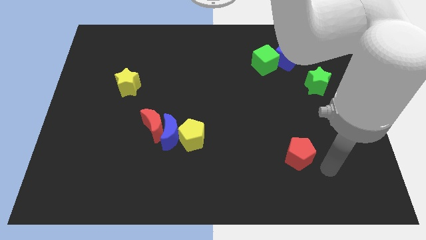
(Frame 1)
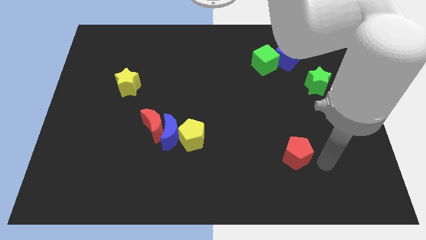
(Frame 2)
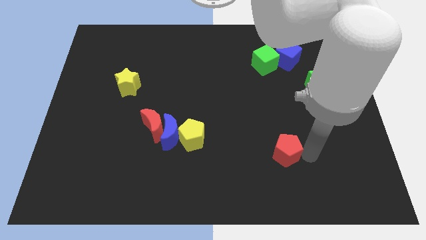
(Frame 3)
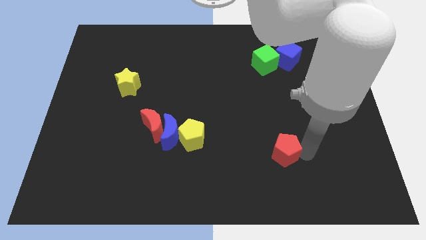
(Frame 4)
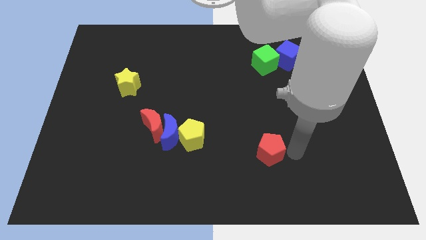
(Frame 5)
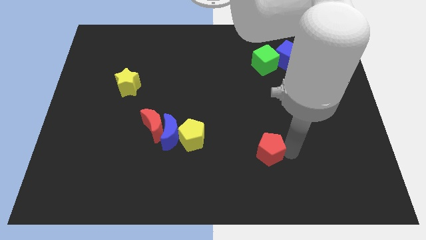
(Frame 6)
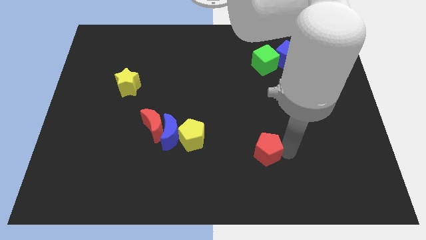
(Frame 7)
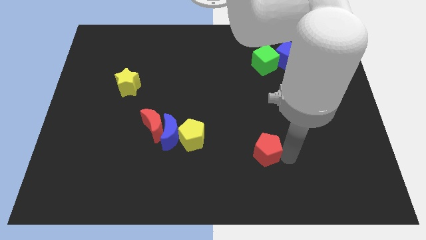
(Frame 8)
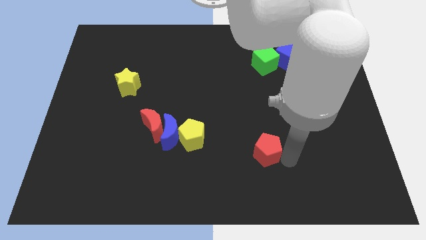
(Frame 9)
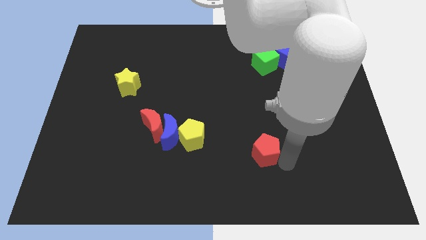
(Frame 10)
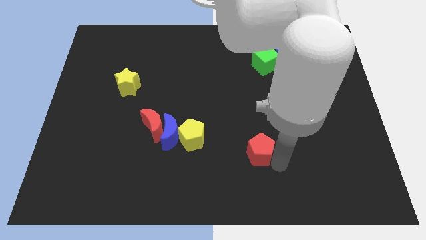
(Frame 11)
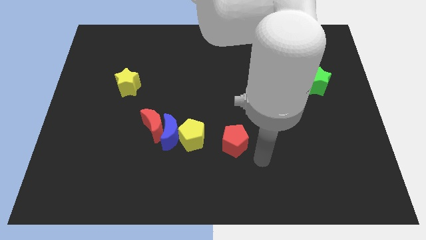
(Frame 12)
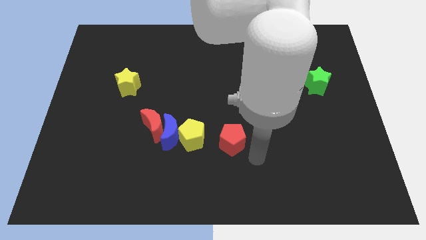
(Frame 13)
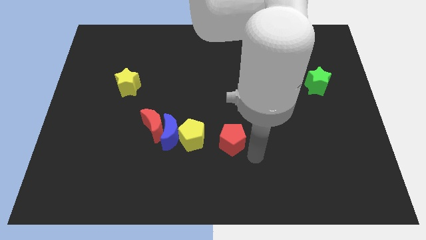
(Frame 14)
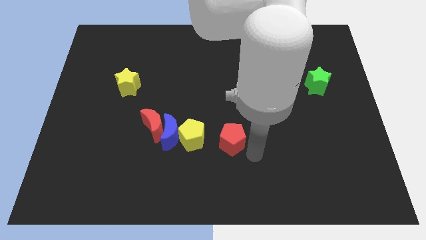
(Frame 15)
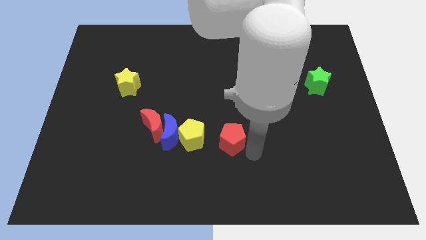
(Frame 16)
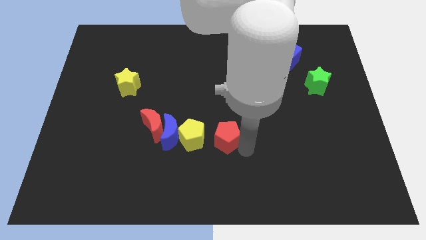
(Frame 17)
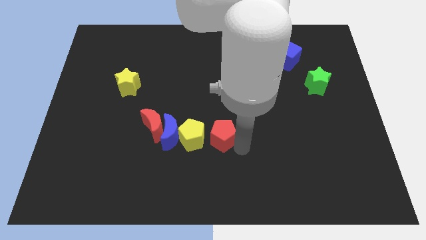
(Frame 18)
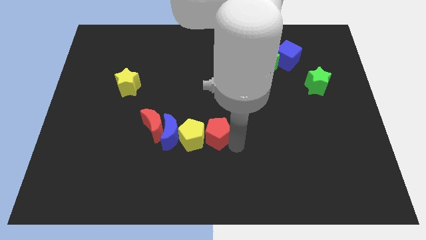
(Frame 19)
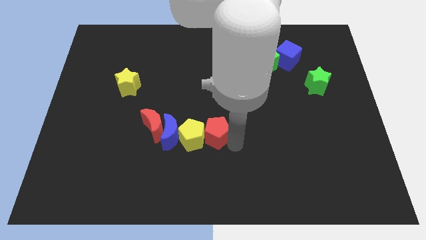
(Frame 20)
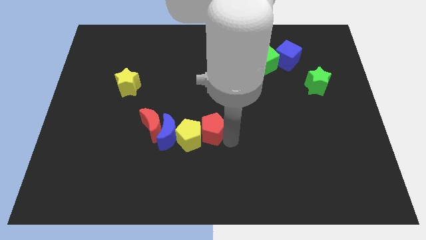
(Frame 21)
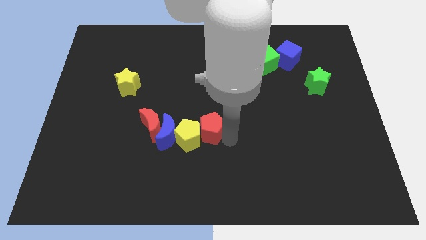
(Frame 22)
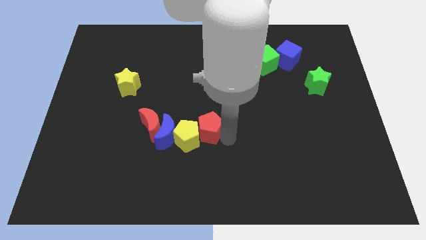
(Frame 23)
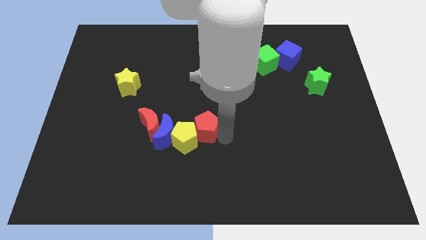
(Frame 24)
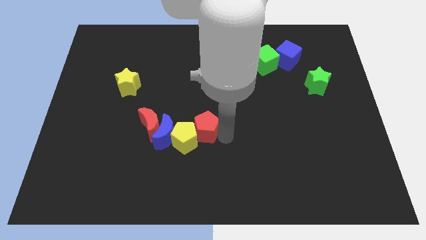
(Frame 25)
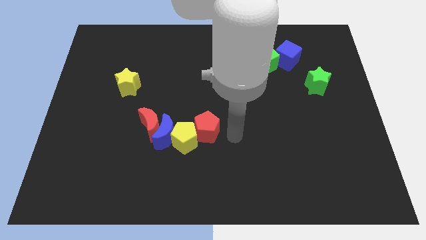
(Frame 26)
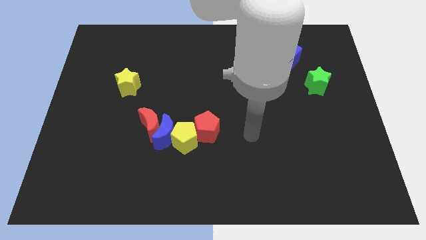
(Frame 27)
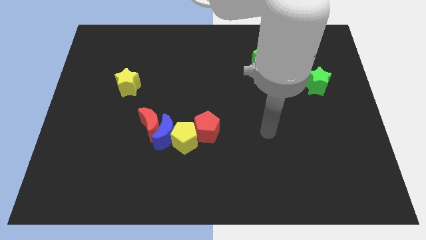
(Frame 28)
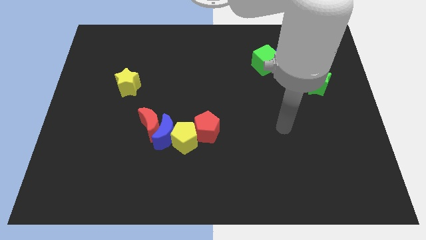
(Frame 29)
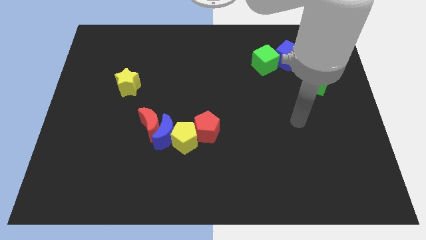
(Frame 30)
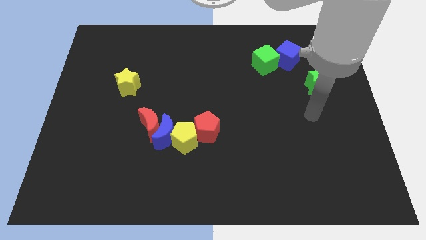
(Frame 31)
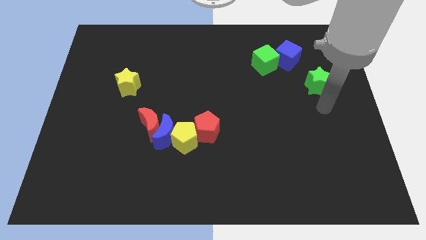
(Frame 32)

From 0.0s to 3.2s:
push the red pentagon into the group of blocks

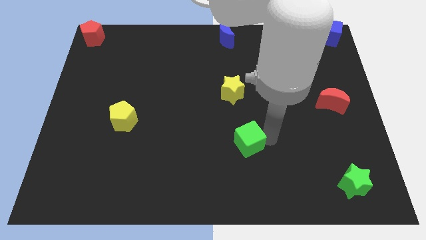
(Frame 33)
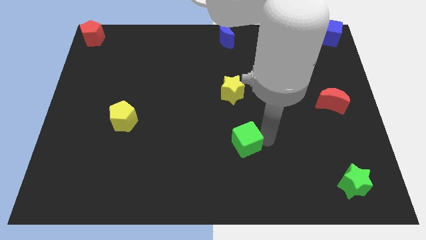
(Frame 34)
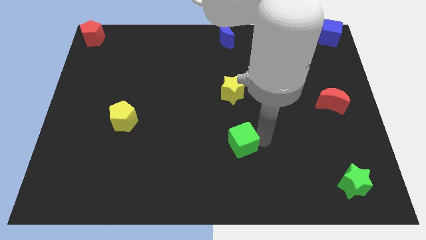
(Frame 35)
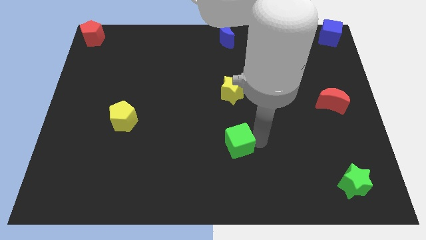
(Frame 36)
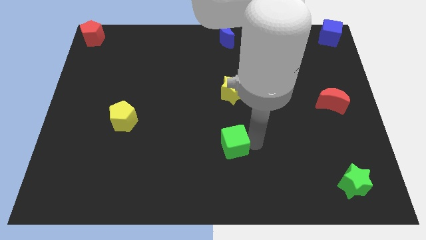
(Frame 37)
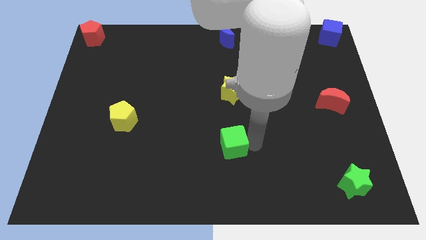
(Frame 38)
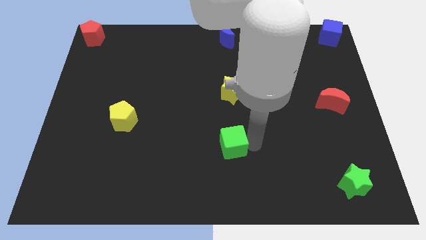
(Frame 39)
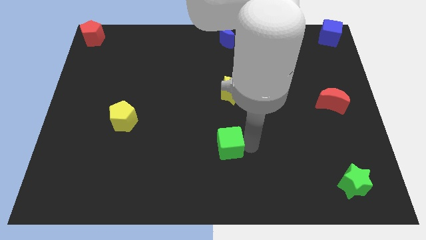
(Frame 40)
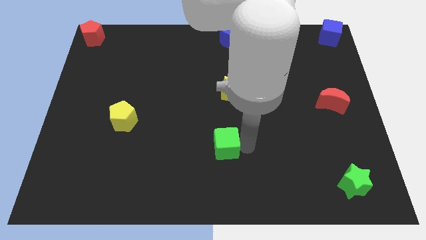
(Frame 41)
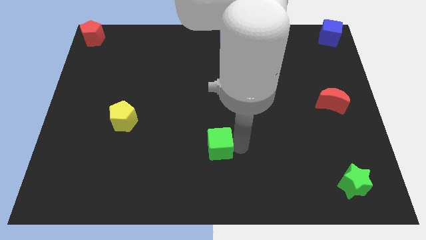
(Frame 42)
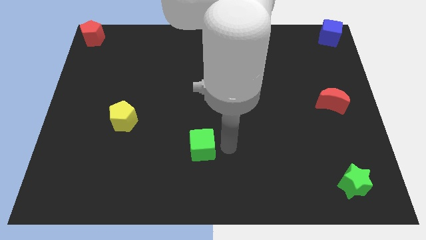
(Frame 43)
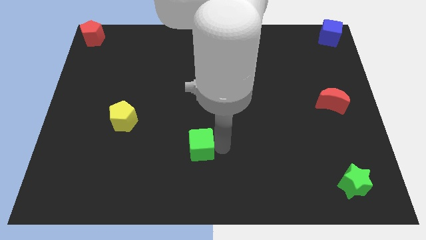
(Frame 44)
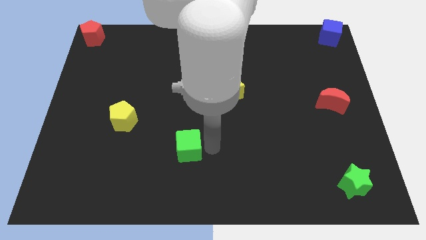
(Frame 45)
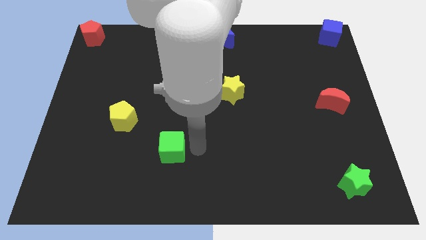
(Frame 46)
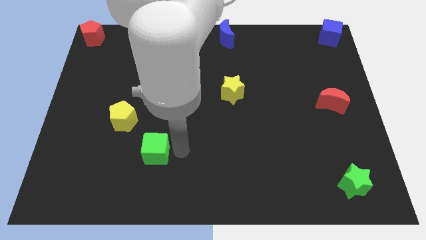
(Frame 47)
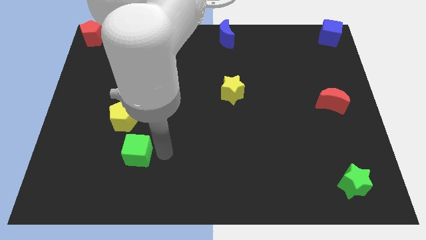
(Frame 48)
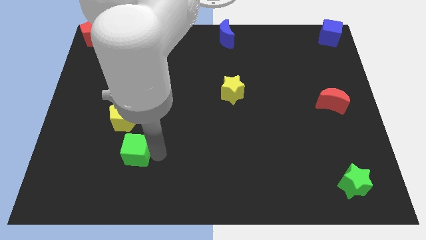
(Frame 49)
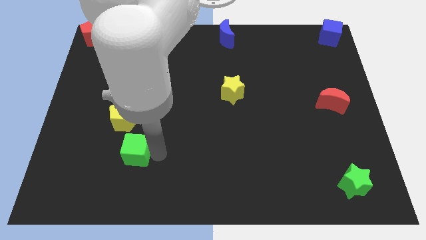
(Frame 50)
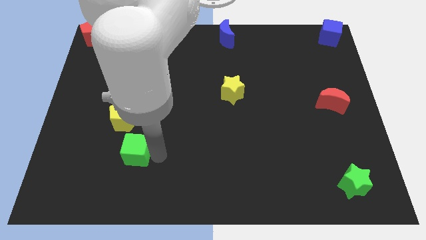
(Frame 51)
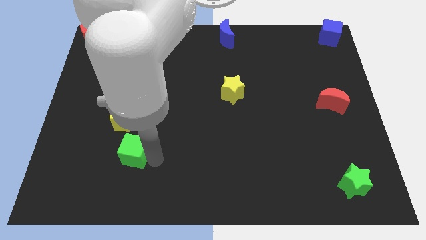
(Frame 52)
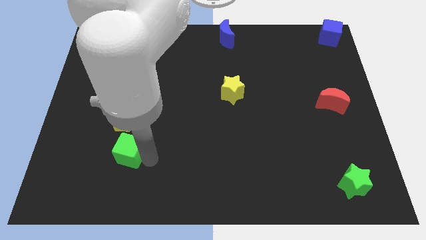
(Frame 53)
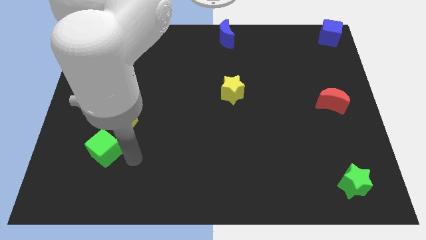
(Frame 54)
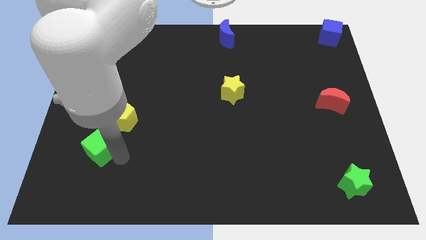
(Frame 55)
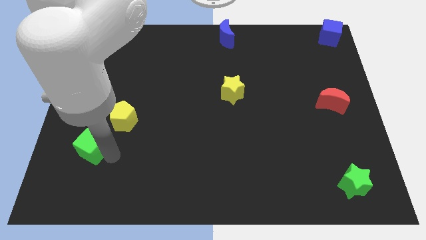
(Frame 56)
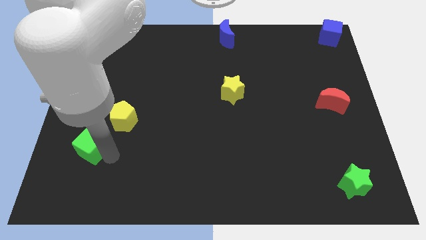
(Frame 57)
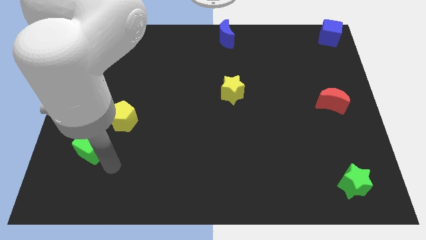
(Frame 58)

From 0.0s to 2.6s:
move the bottom green cube to the left

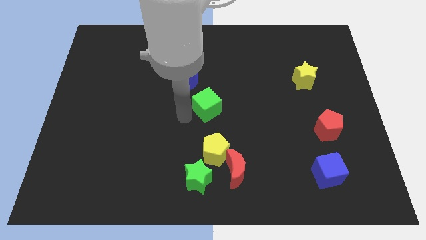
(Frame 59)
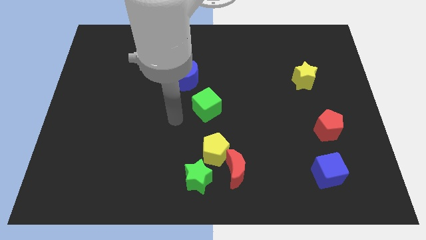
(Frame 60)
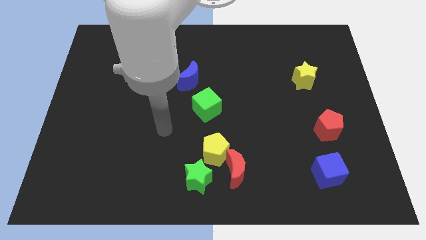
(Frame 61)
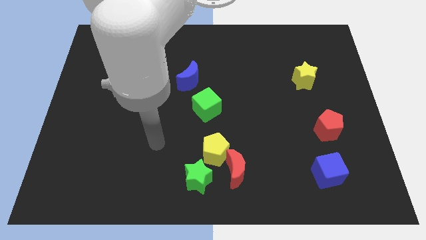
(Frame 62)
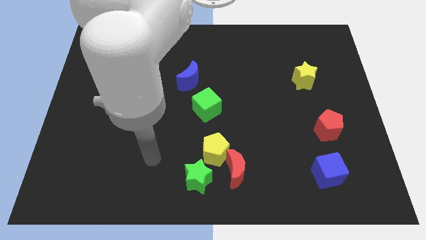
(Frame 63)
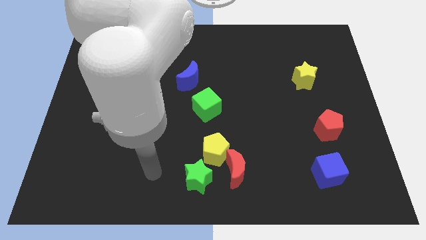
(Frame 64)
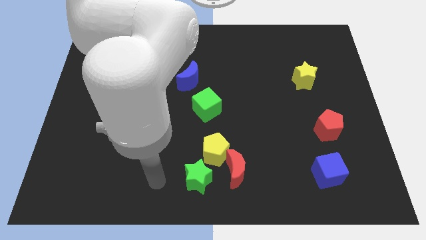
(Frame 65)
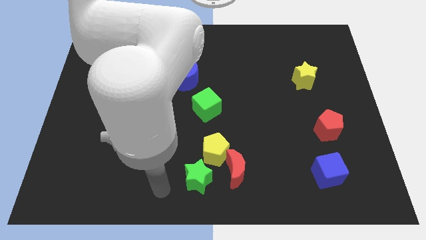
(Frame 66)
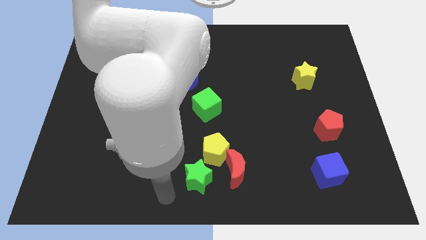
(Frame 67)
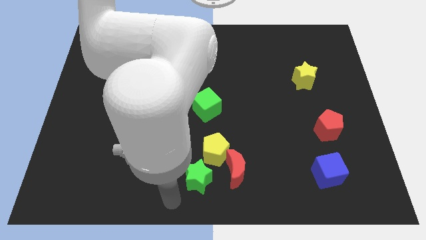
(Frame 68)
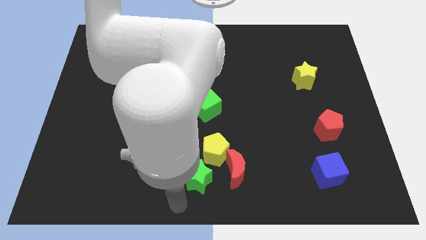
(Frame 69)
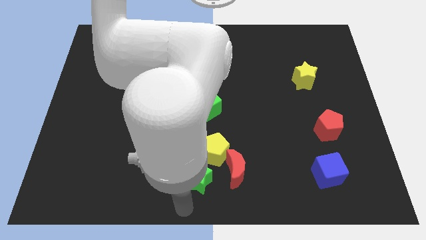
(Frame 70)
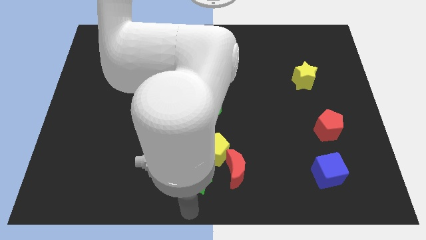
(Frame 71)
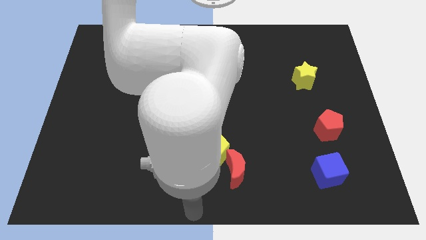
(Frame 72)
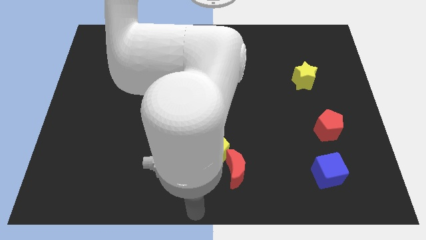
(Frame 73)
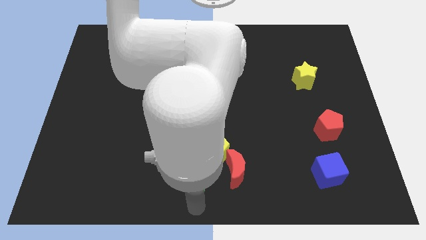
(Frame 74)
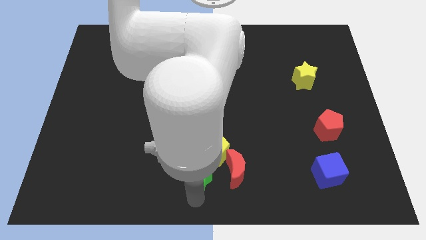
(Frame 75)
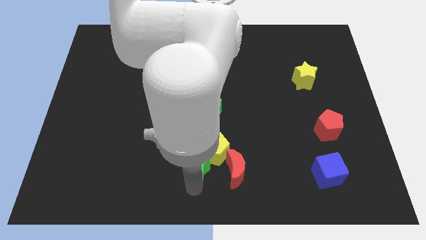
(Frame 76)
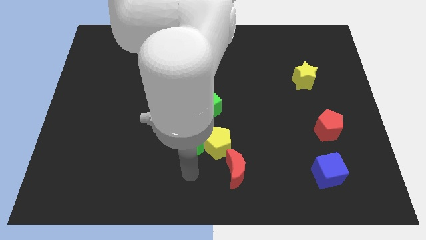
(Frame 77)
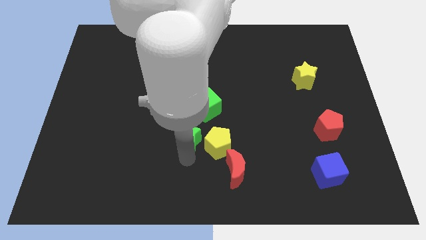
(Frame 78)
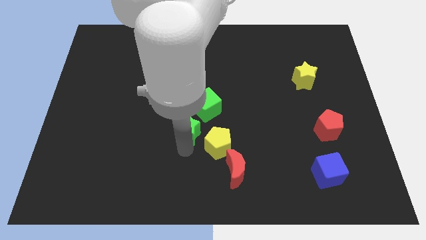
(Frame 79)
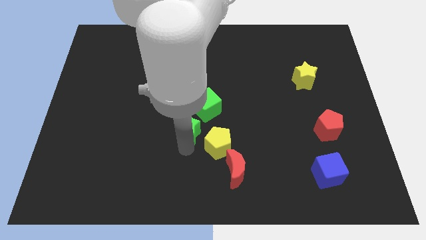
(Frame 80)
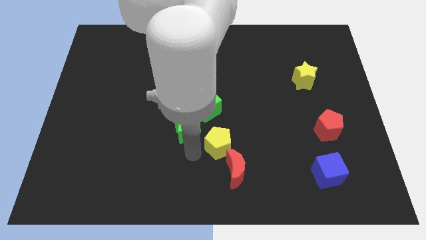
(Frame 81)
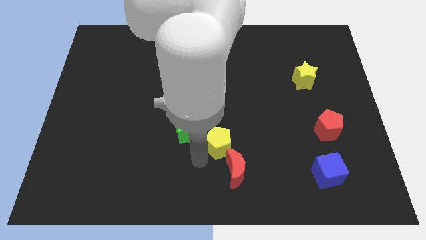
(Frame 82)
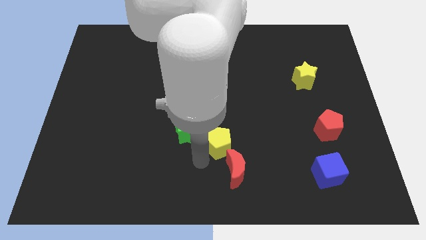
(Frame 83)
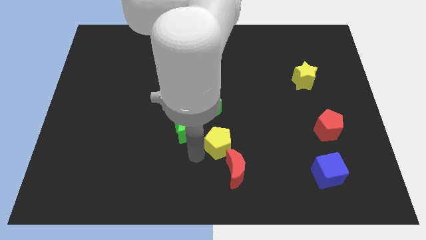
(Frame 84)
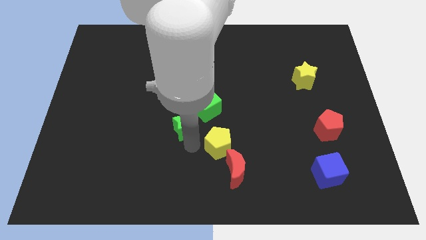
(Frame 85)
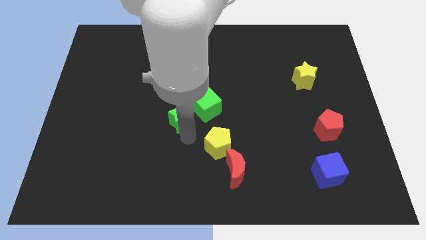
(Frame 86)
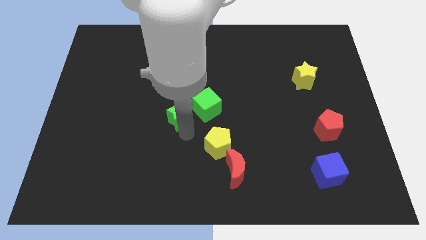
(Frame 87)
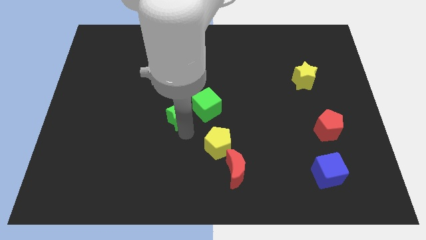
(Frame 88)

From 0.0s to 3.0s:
move the green star away from the yellow pentagon

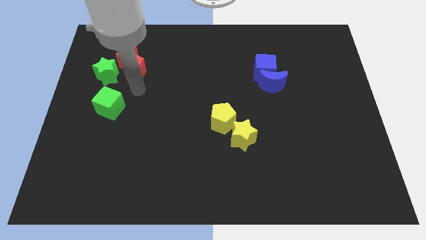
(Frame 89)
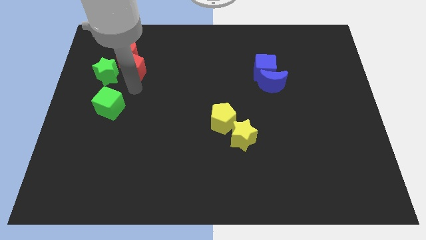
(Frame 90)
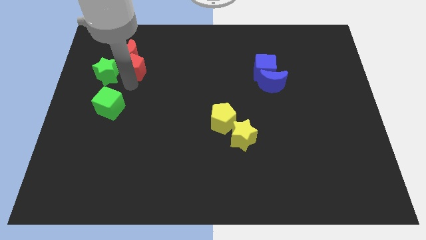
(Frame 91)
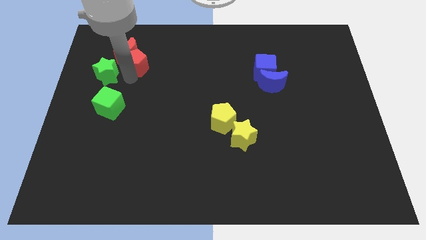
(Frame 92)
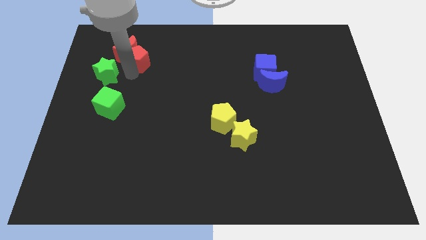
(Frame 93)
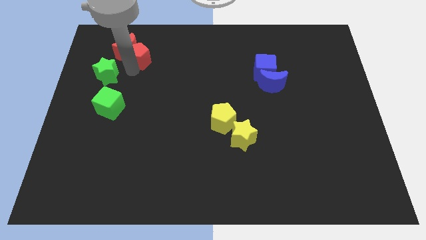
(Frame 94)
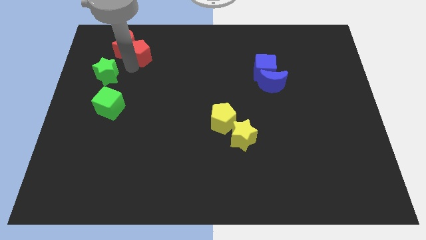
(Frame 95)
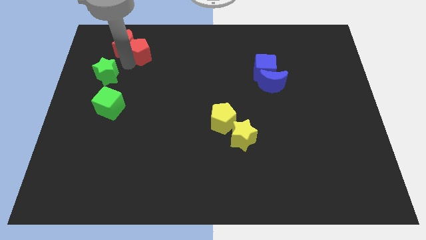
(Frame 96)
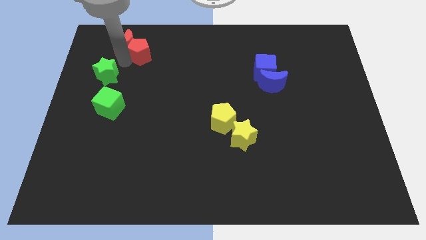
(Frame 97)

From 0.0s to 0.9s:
push the red pentagon below the red crescent
